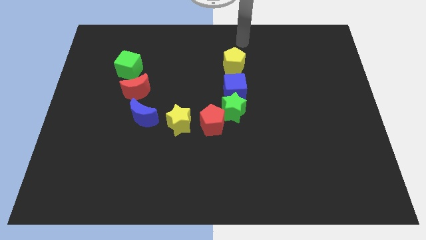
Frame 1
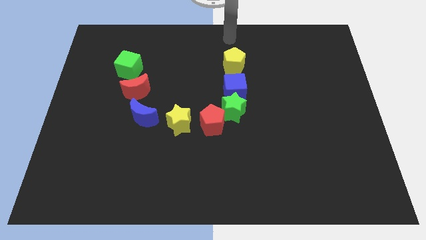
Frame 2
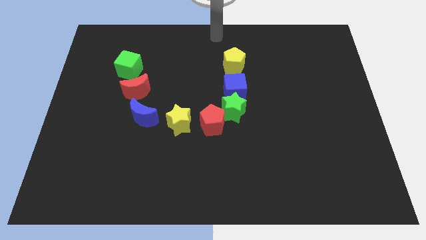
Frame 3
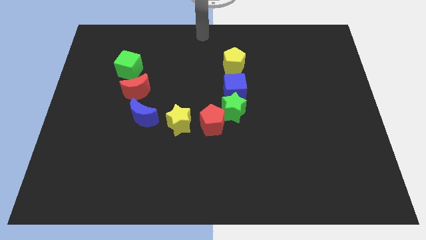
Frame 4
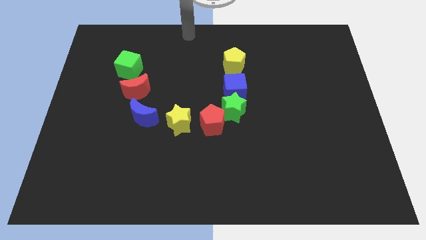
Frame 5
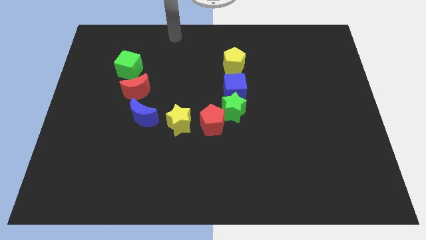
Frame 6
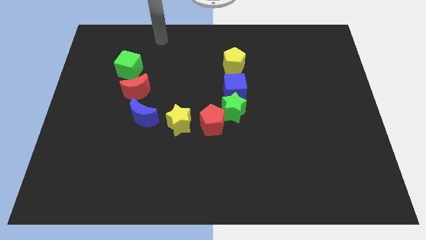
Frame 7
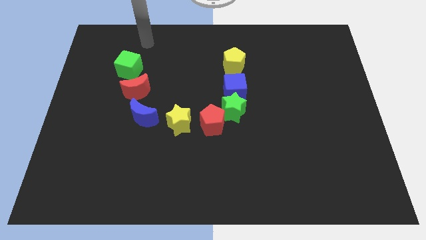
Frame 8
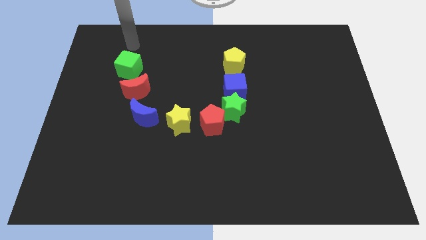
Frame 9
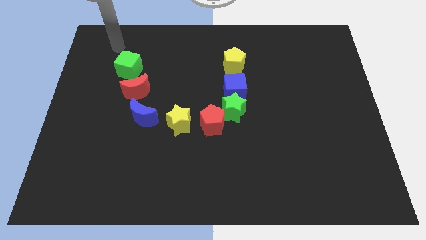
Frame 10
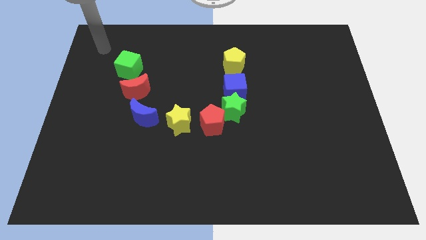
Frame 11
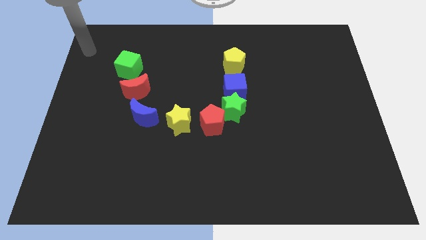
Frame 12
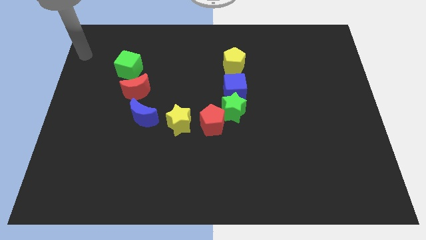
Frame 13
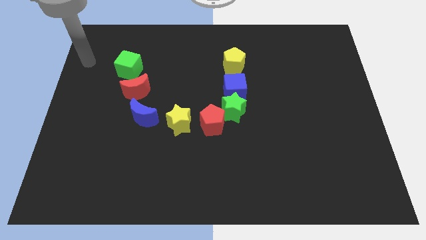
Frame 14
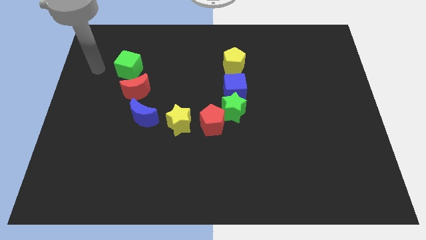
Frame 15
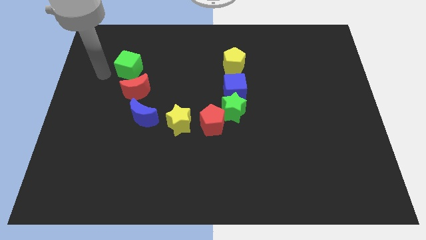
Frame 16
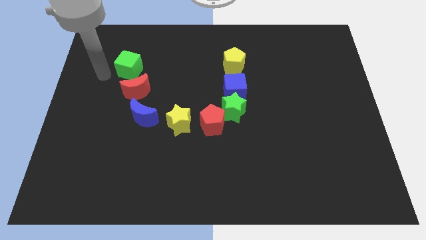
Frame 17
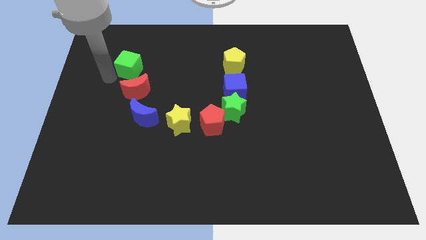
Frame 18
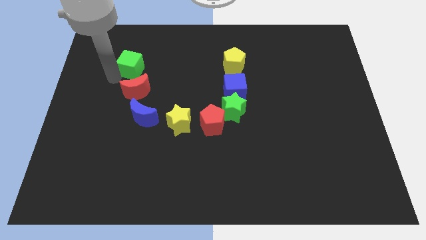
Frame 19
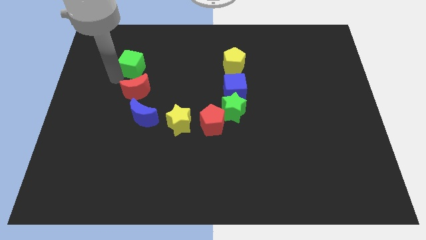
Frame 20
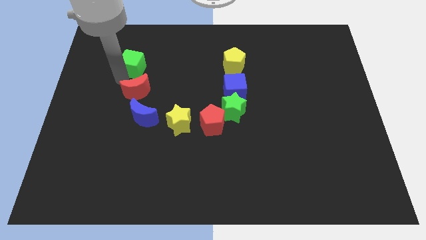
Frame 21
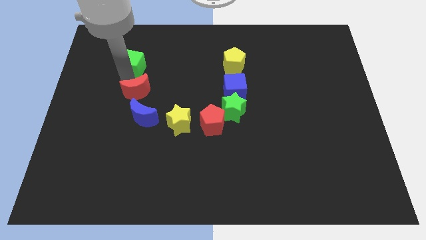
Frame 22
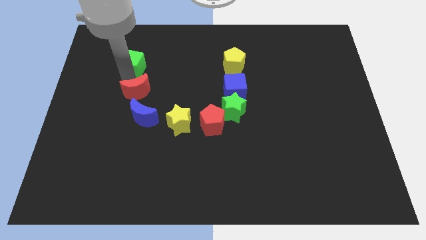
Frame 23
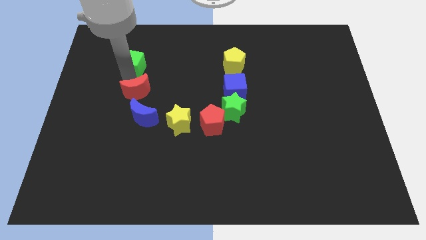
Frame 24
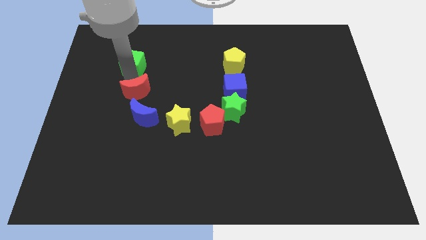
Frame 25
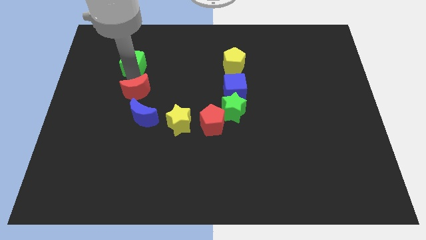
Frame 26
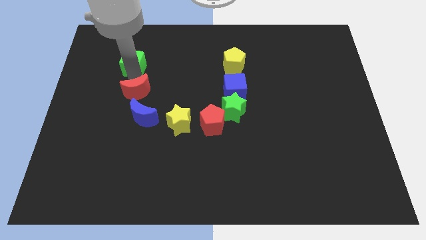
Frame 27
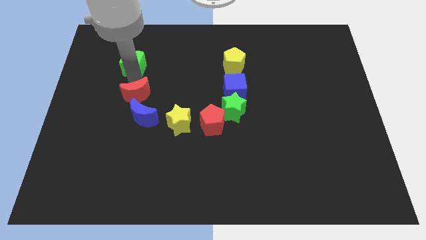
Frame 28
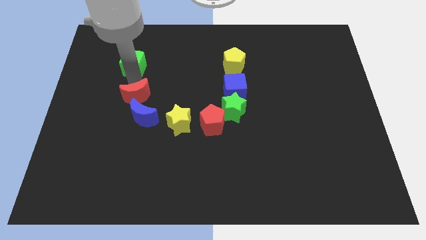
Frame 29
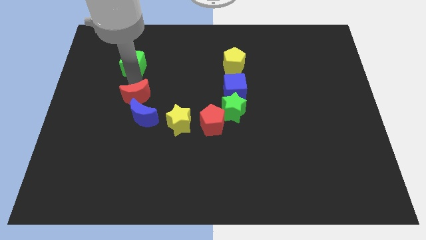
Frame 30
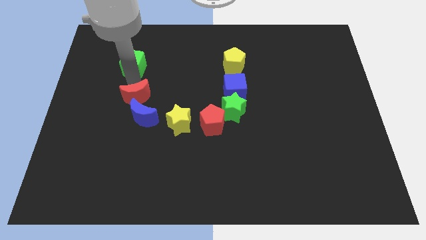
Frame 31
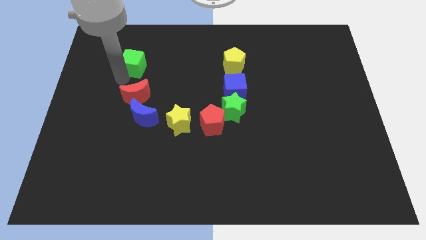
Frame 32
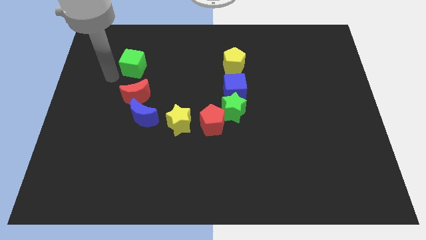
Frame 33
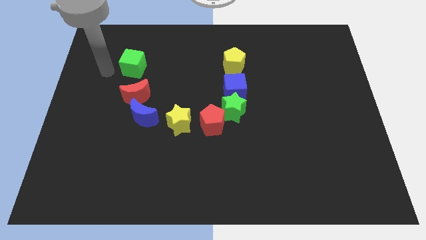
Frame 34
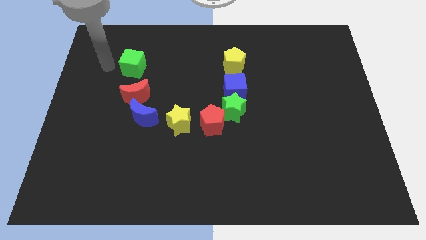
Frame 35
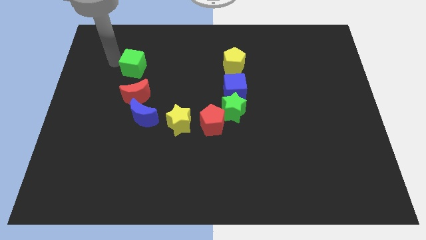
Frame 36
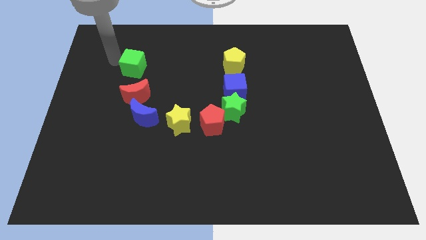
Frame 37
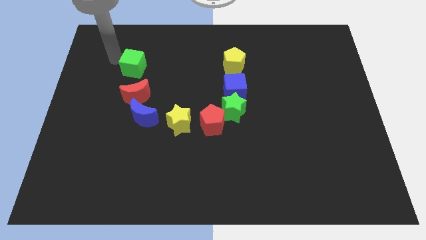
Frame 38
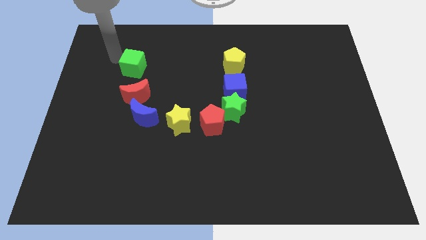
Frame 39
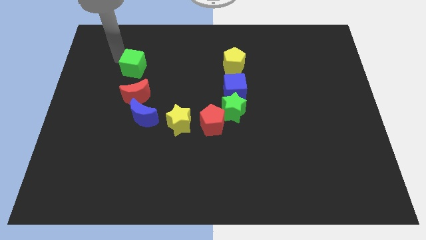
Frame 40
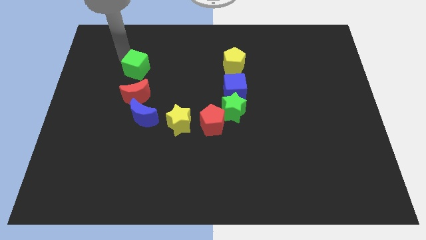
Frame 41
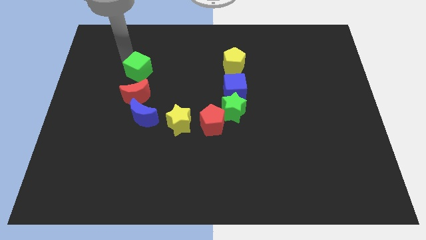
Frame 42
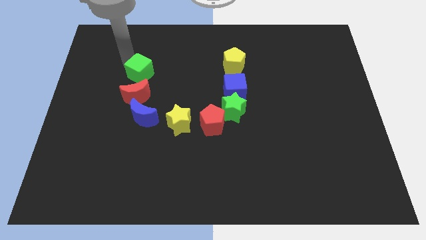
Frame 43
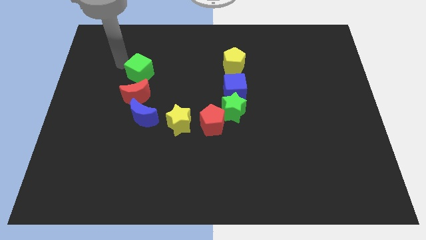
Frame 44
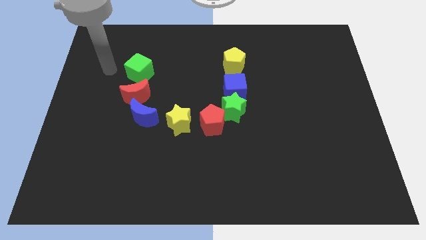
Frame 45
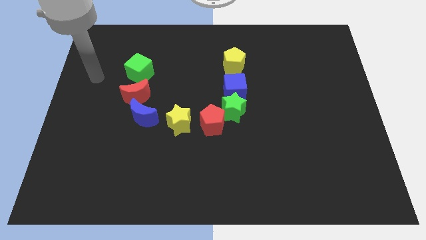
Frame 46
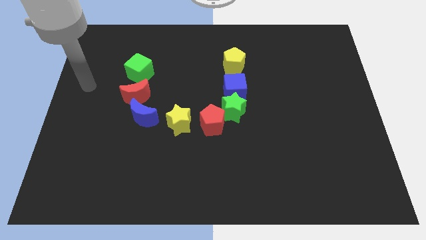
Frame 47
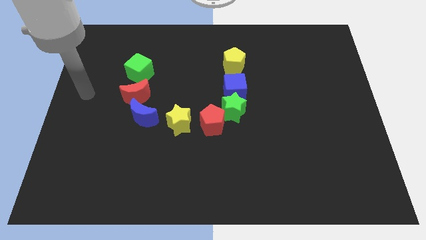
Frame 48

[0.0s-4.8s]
push the red moon and green cube towards down

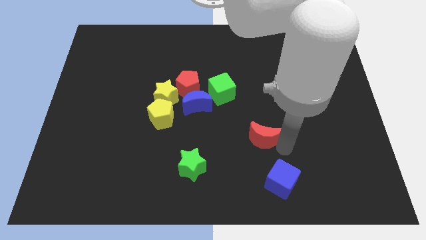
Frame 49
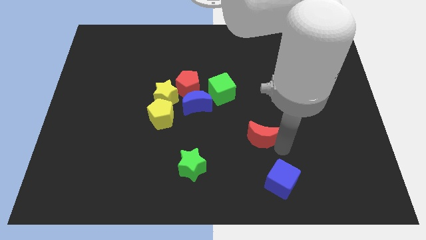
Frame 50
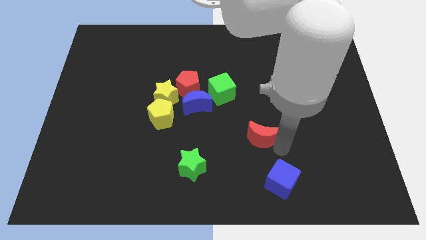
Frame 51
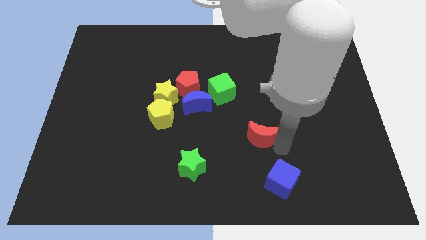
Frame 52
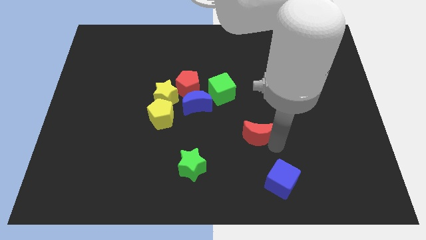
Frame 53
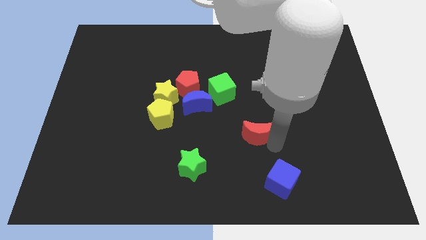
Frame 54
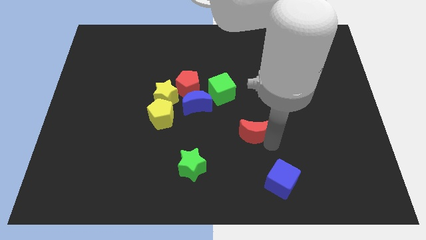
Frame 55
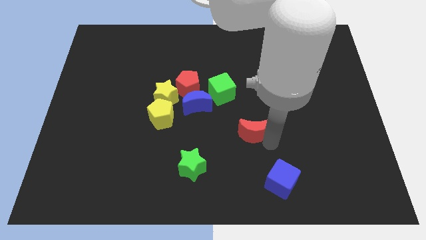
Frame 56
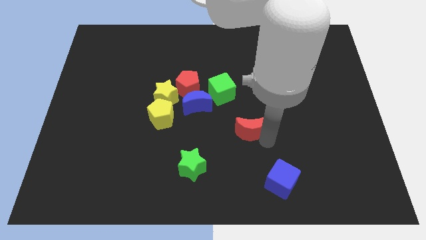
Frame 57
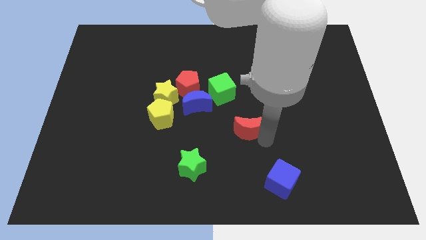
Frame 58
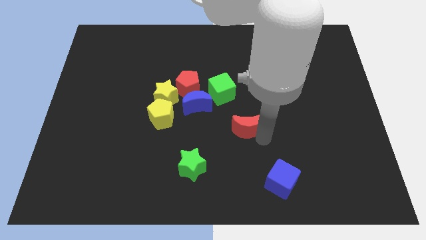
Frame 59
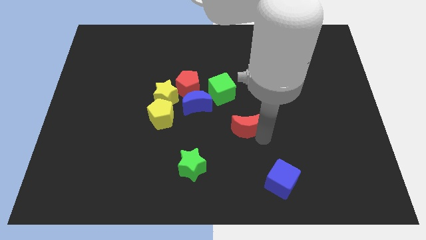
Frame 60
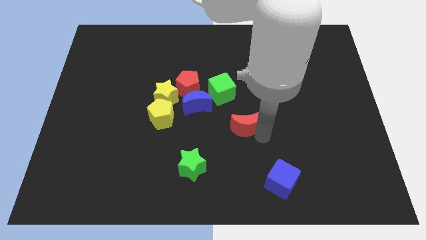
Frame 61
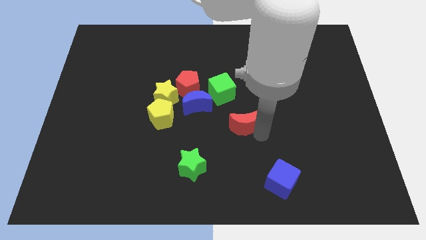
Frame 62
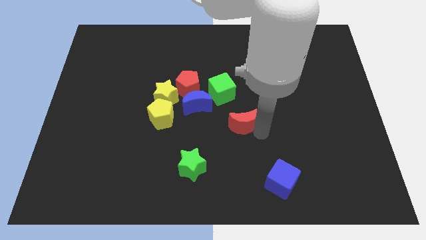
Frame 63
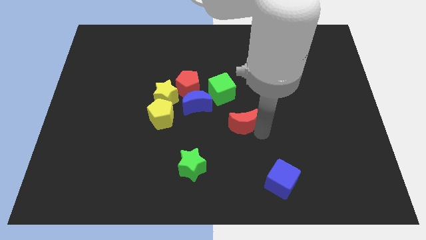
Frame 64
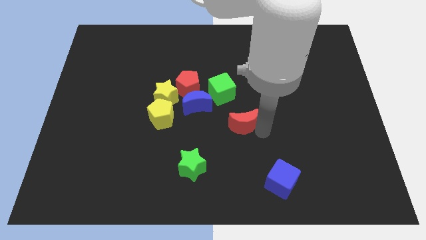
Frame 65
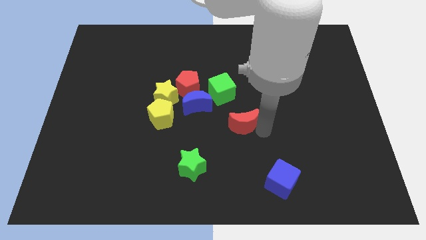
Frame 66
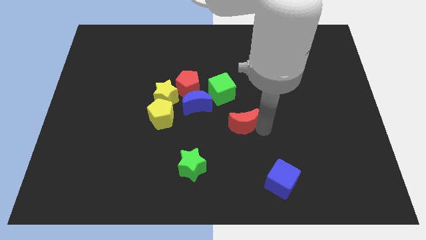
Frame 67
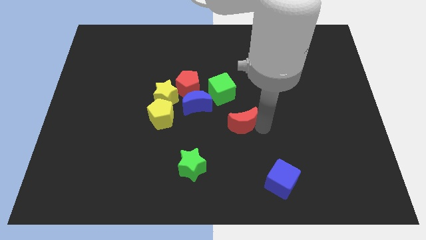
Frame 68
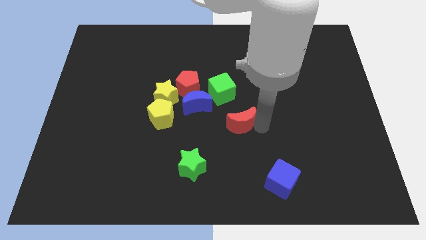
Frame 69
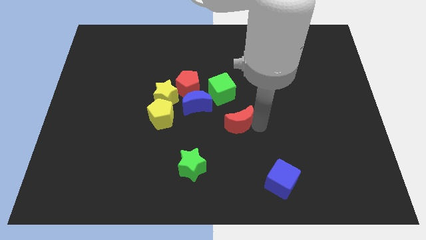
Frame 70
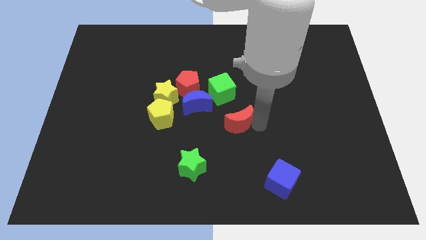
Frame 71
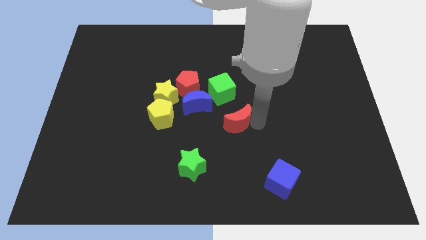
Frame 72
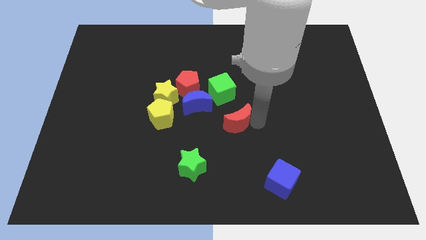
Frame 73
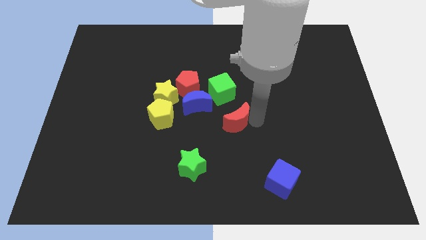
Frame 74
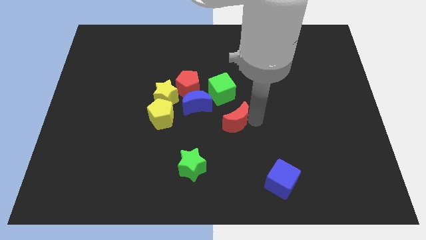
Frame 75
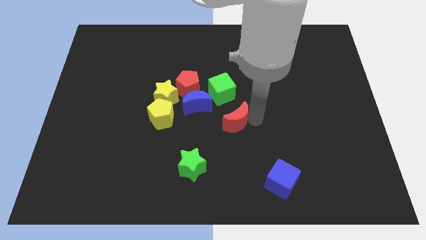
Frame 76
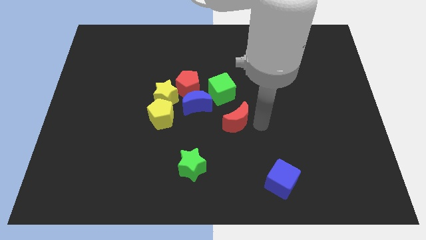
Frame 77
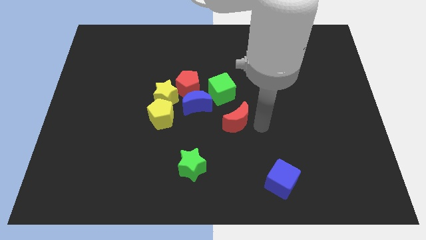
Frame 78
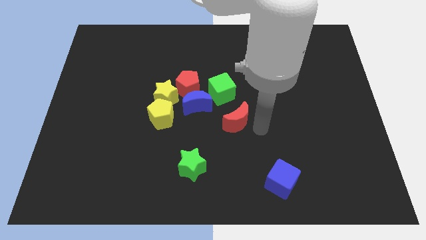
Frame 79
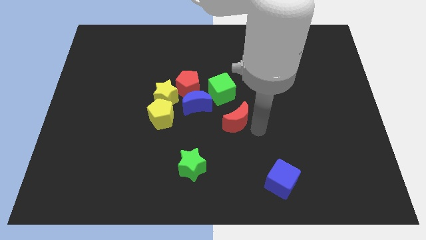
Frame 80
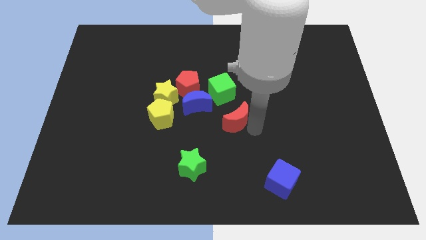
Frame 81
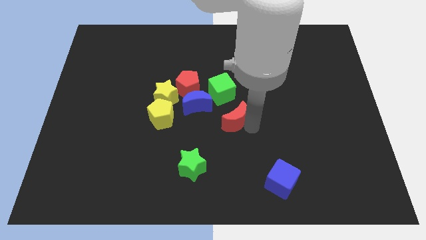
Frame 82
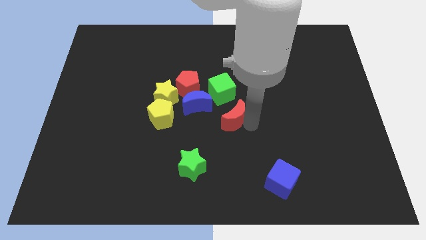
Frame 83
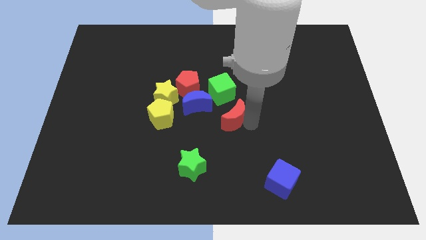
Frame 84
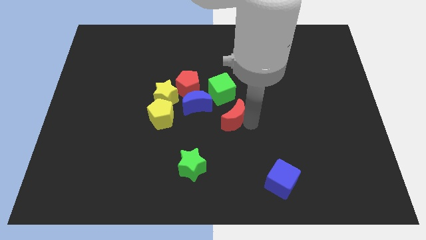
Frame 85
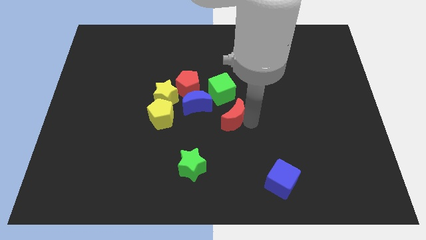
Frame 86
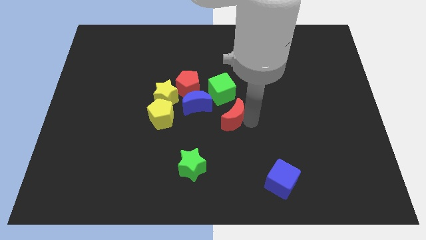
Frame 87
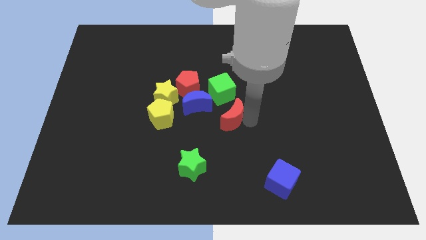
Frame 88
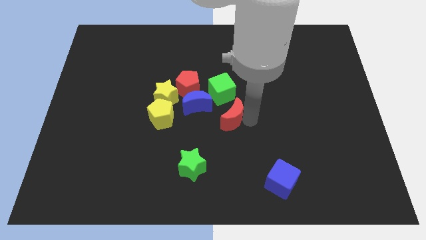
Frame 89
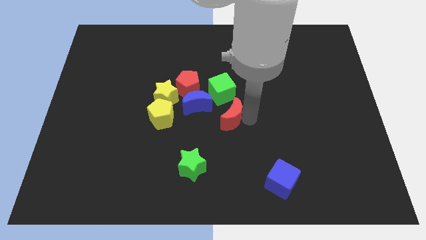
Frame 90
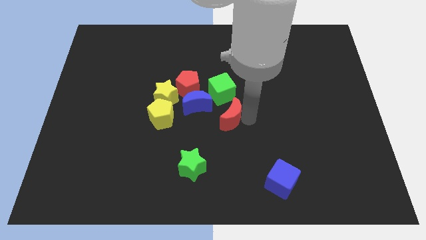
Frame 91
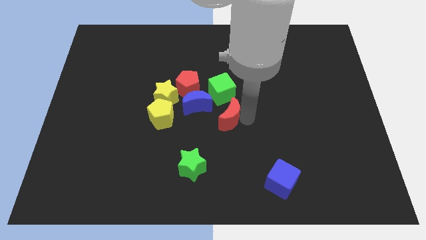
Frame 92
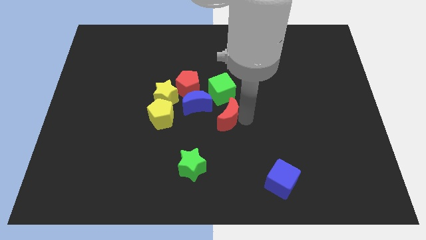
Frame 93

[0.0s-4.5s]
push the red crescent towards the green cube
